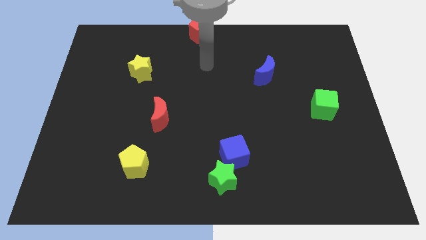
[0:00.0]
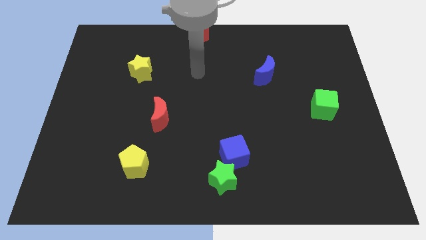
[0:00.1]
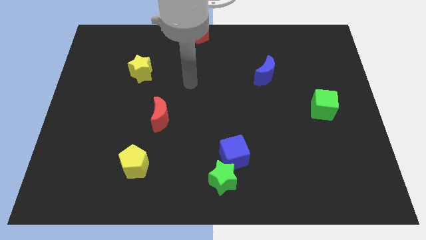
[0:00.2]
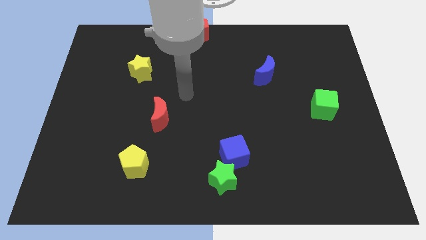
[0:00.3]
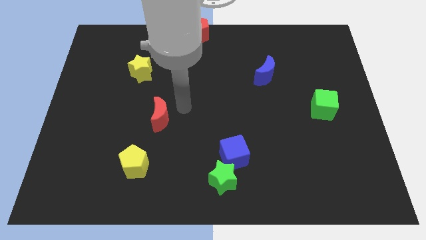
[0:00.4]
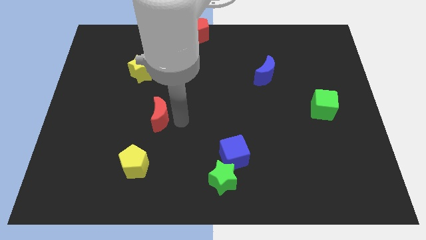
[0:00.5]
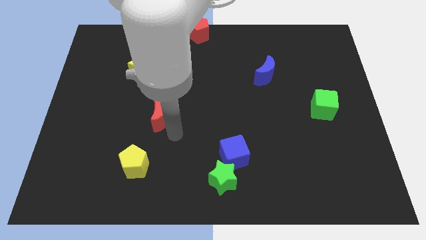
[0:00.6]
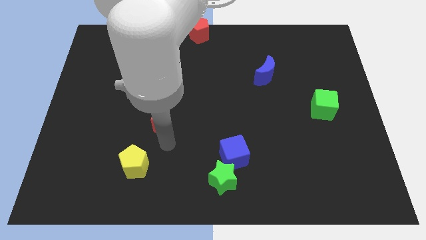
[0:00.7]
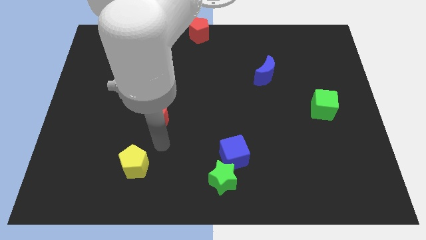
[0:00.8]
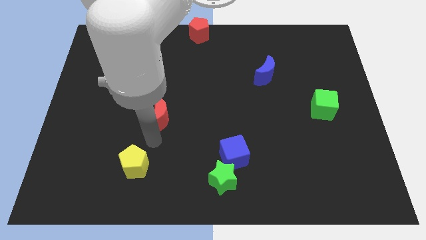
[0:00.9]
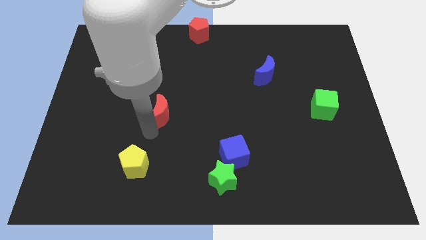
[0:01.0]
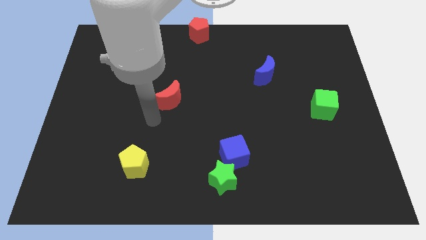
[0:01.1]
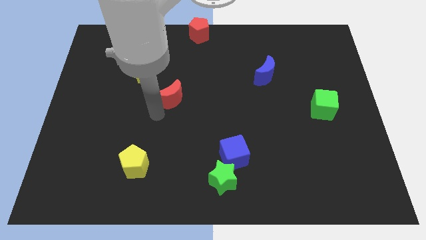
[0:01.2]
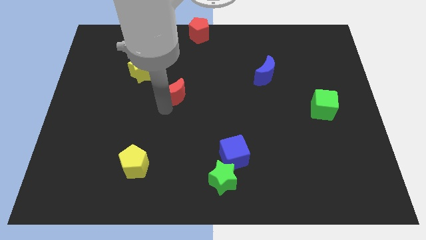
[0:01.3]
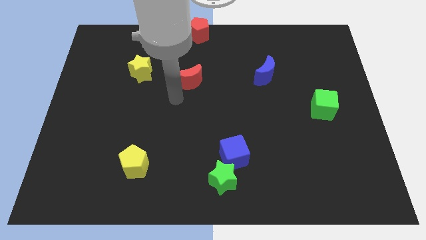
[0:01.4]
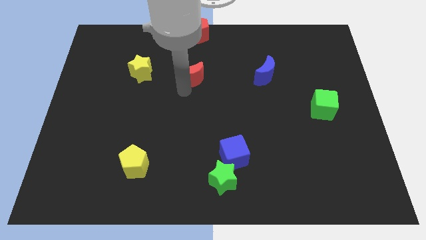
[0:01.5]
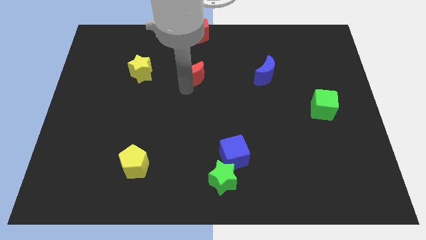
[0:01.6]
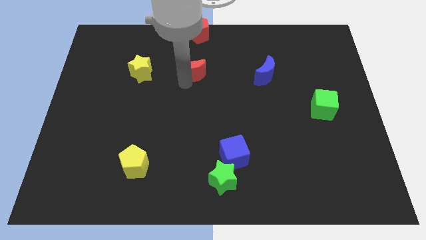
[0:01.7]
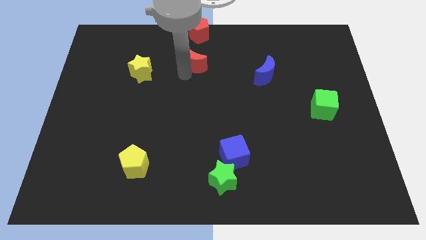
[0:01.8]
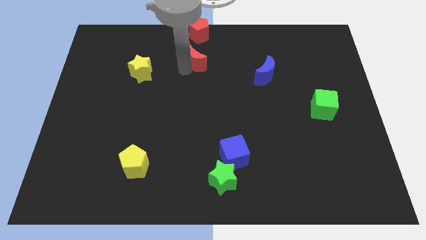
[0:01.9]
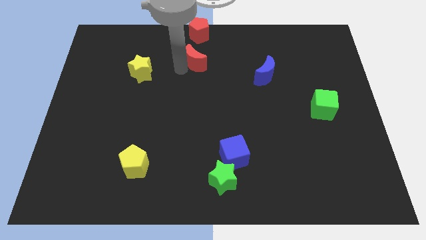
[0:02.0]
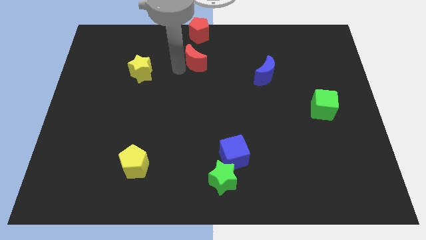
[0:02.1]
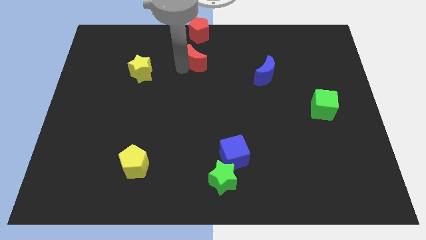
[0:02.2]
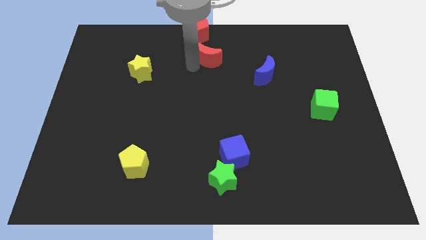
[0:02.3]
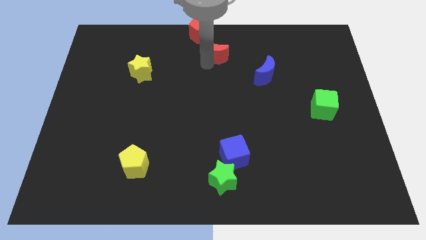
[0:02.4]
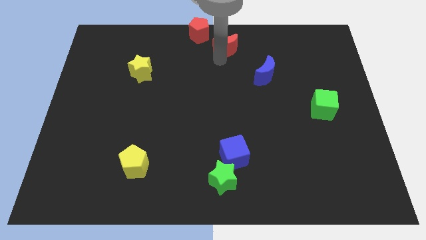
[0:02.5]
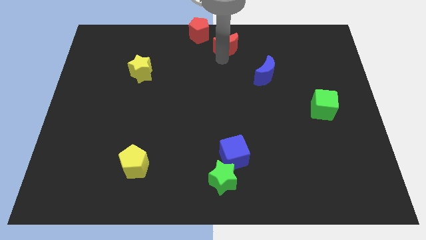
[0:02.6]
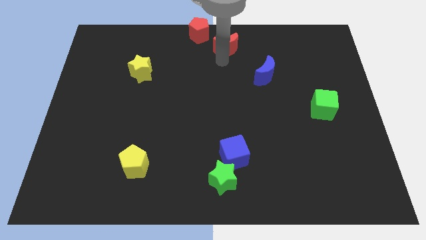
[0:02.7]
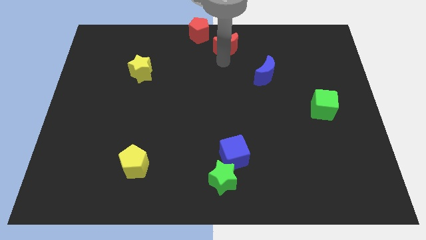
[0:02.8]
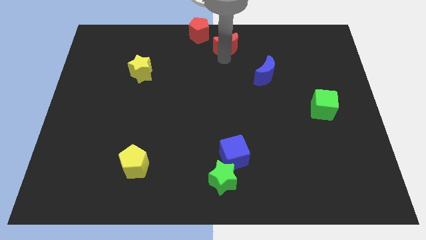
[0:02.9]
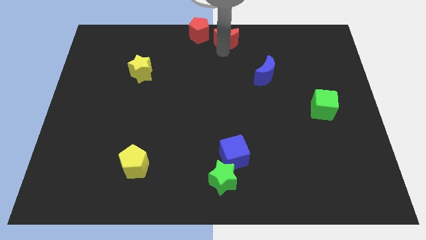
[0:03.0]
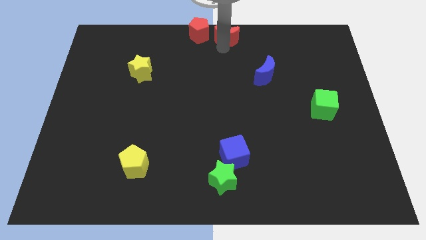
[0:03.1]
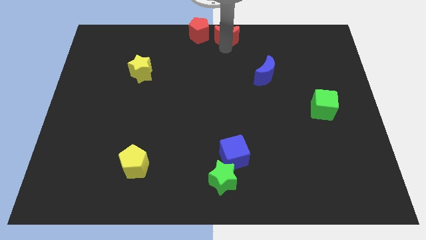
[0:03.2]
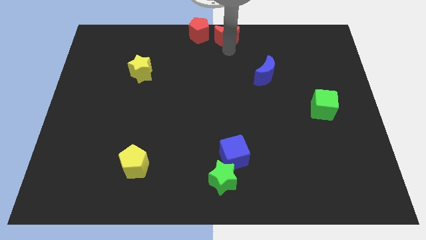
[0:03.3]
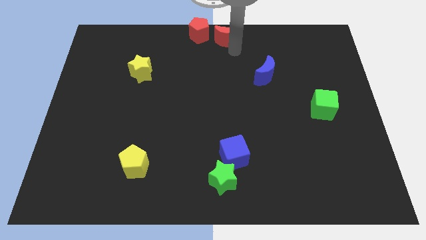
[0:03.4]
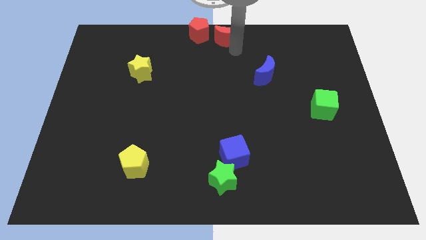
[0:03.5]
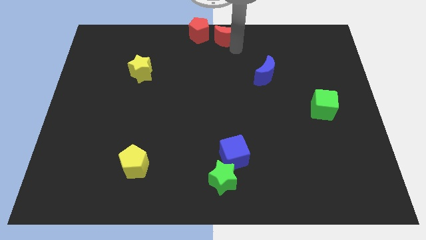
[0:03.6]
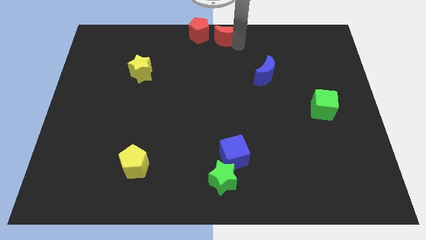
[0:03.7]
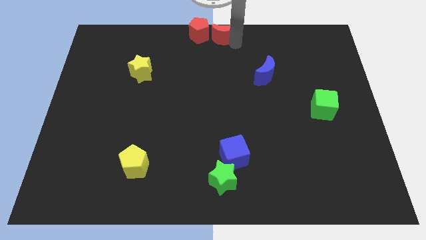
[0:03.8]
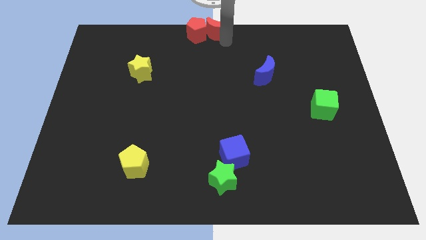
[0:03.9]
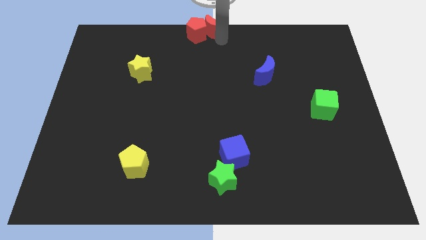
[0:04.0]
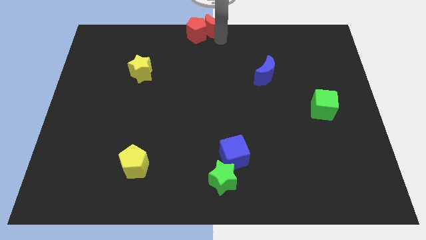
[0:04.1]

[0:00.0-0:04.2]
move red moon right beside the red pentagon

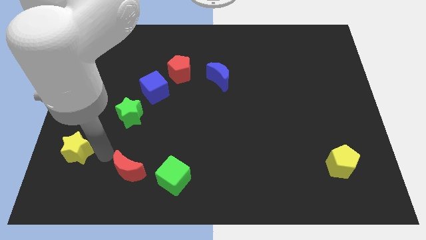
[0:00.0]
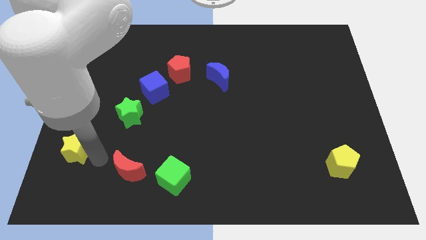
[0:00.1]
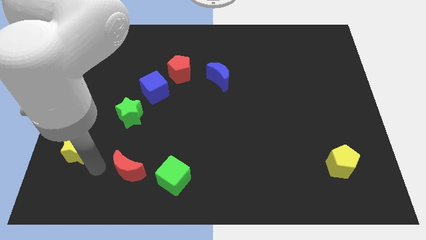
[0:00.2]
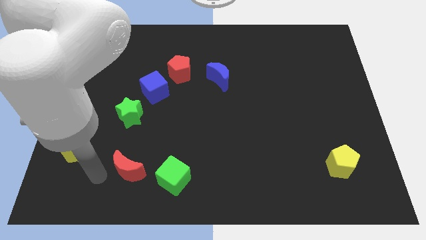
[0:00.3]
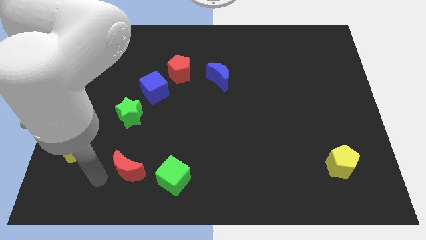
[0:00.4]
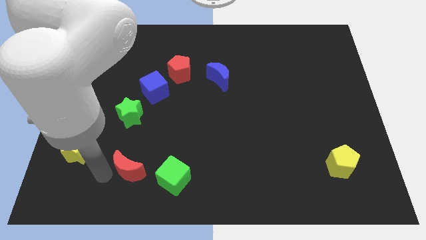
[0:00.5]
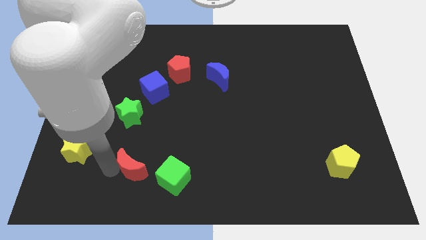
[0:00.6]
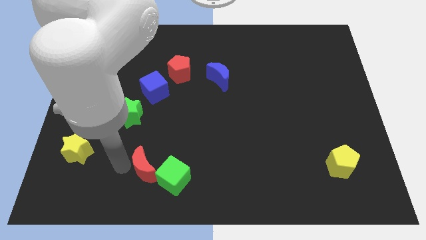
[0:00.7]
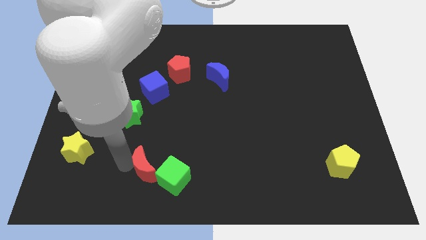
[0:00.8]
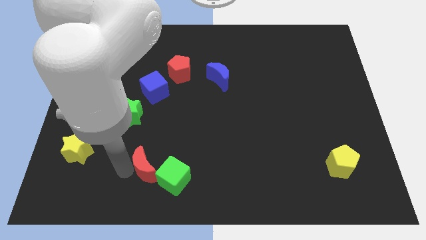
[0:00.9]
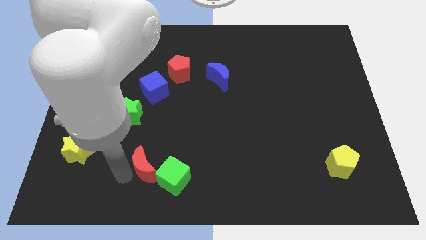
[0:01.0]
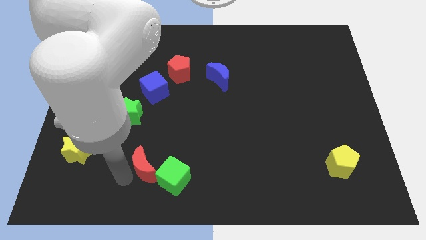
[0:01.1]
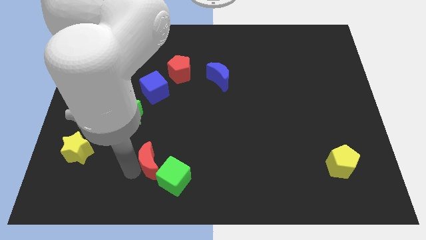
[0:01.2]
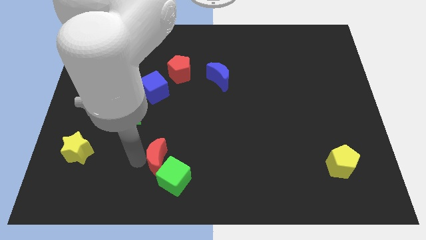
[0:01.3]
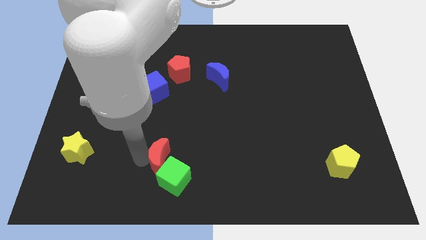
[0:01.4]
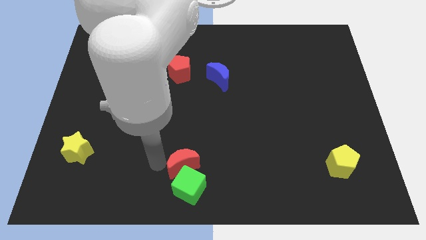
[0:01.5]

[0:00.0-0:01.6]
push the red moon into the green cube

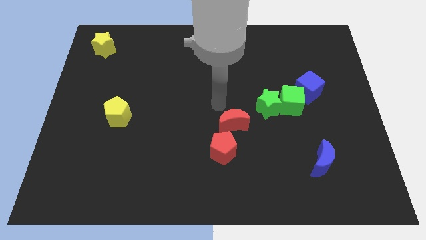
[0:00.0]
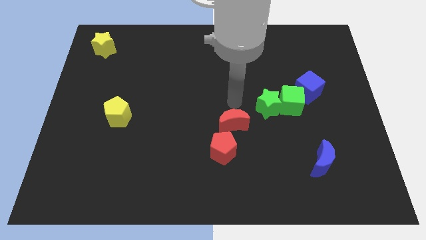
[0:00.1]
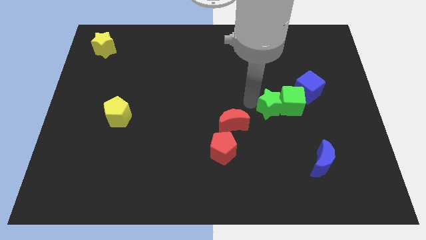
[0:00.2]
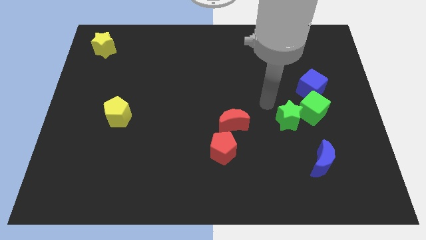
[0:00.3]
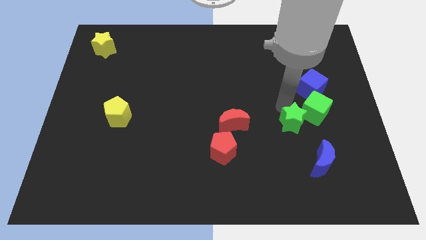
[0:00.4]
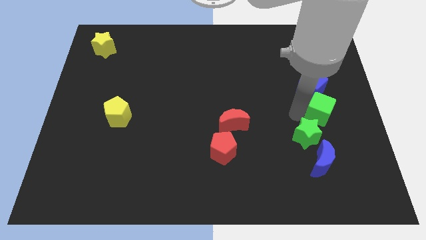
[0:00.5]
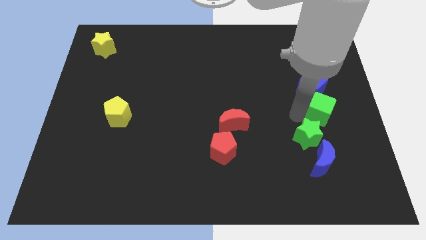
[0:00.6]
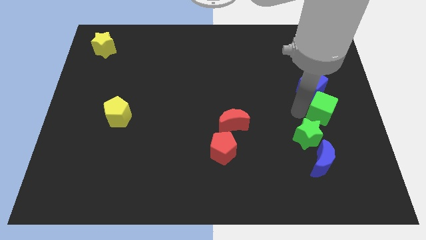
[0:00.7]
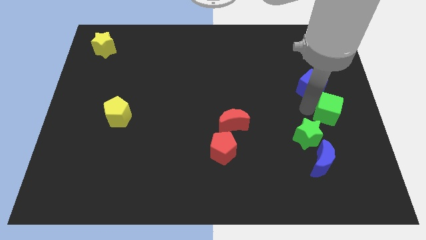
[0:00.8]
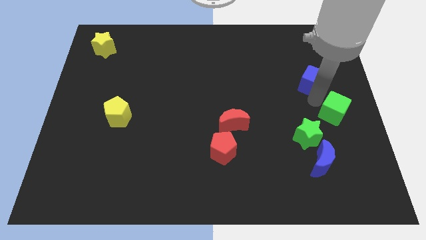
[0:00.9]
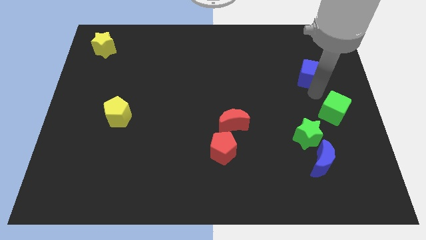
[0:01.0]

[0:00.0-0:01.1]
separate the green star from the green cube

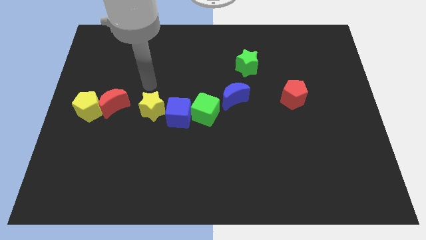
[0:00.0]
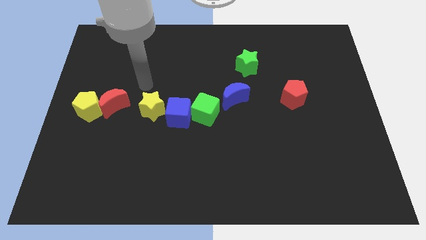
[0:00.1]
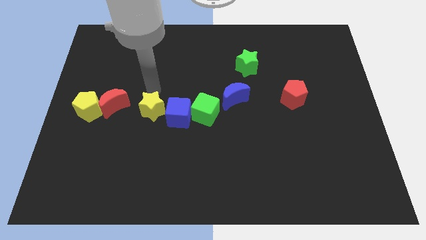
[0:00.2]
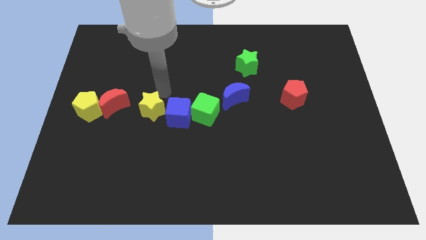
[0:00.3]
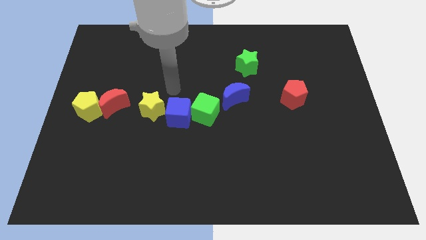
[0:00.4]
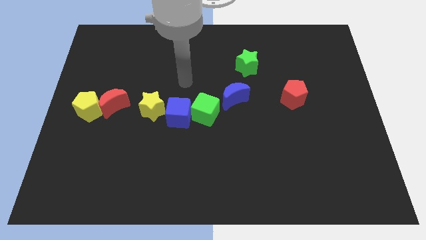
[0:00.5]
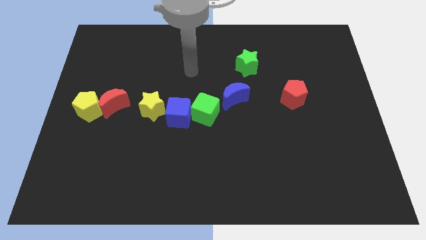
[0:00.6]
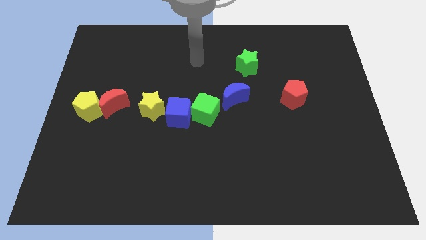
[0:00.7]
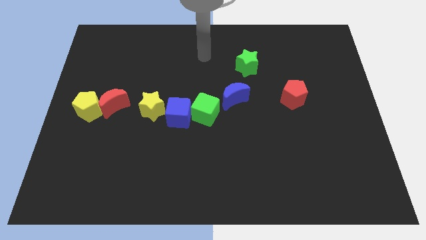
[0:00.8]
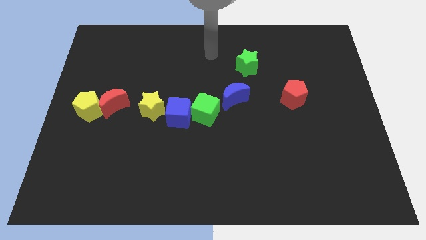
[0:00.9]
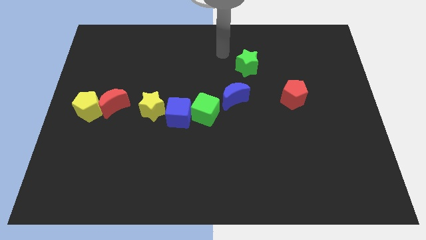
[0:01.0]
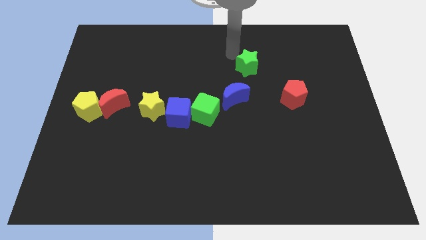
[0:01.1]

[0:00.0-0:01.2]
place your arm near green star

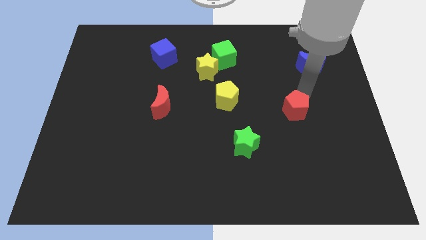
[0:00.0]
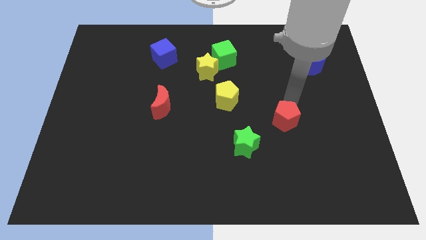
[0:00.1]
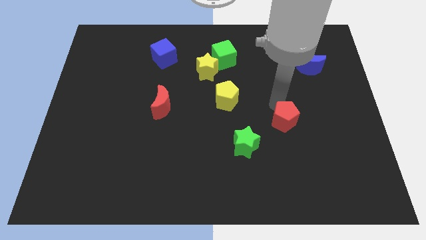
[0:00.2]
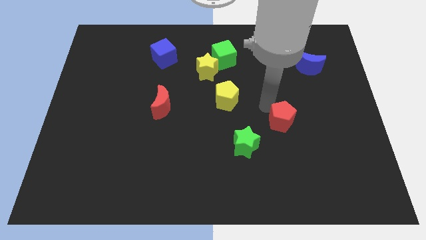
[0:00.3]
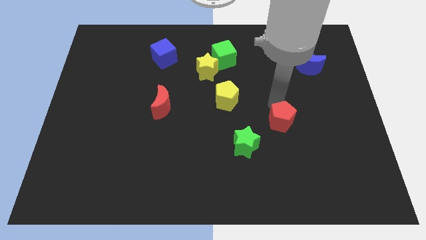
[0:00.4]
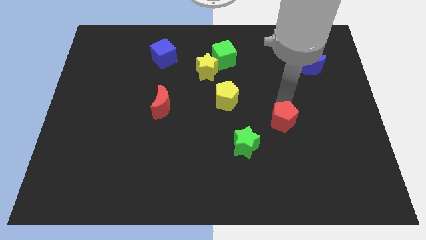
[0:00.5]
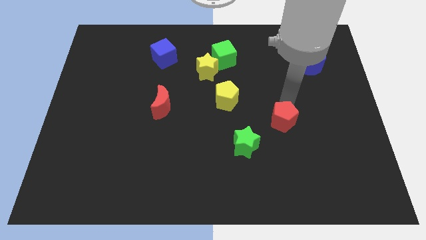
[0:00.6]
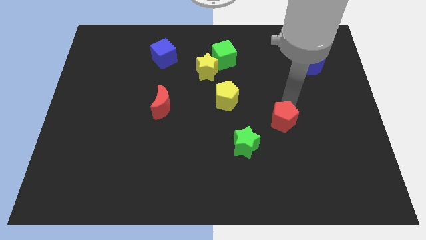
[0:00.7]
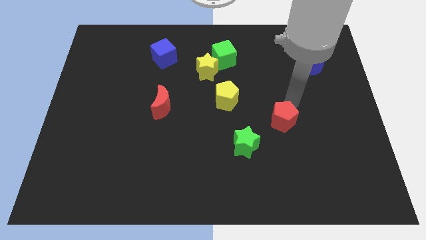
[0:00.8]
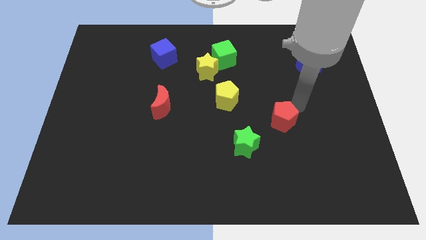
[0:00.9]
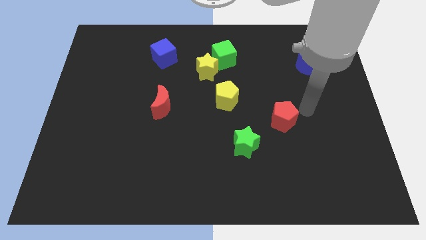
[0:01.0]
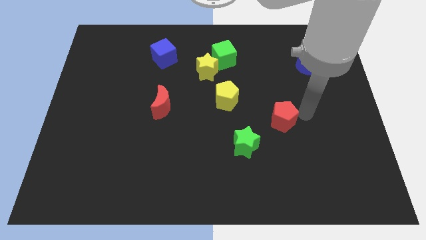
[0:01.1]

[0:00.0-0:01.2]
push the red pentagon towards the green star
